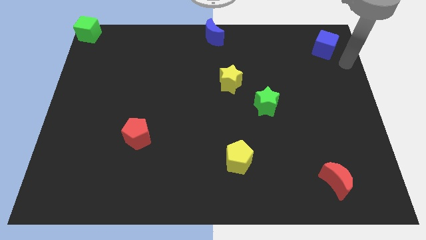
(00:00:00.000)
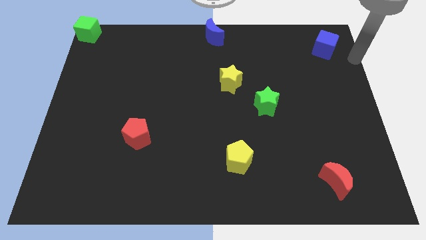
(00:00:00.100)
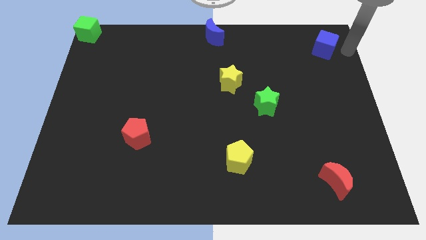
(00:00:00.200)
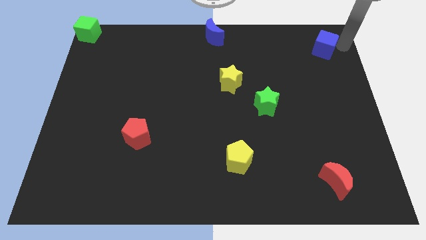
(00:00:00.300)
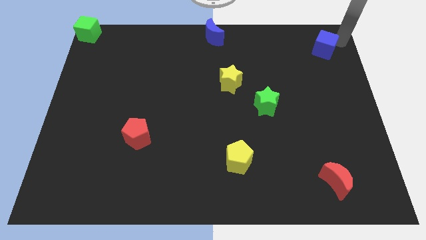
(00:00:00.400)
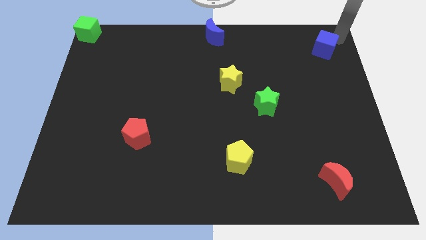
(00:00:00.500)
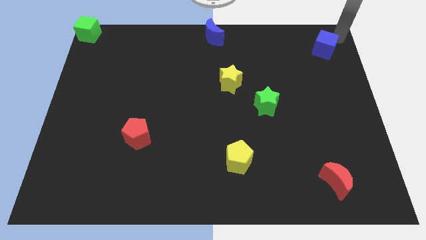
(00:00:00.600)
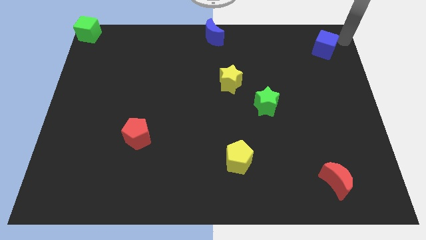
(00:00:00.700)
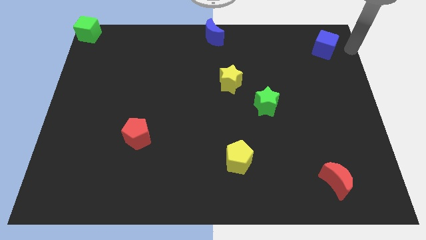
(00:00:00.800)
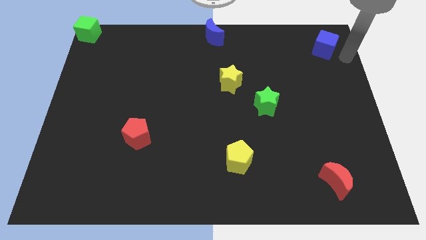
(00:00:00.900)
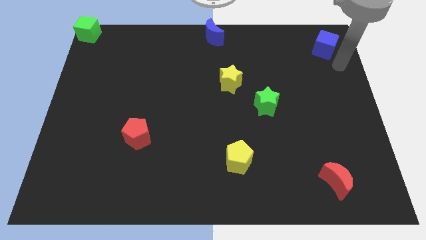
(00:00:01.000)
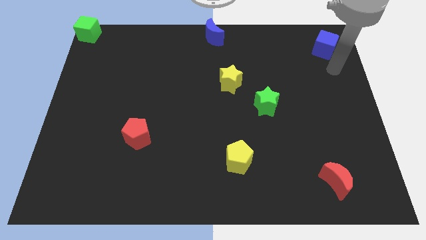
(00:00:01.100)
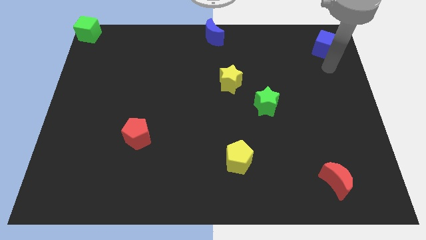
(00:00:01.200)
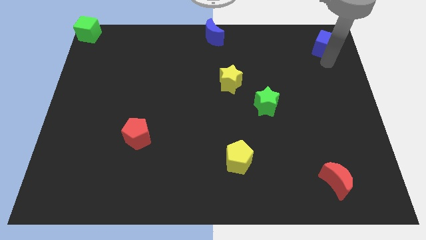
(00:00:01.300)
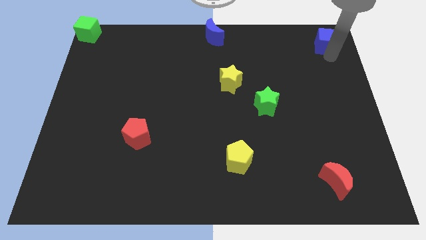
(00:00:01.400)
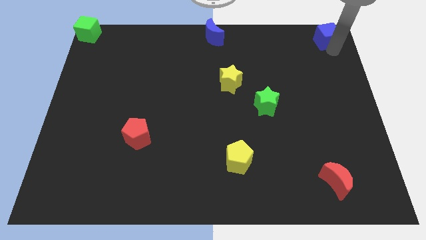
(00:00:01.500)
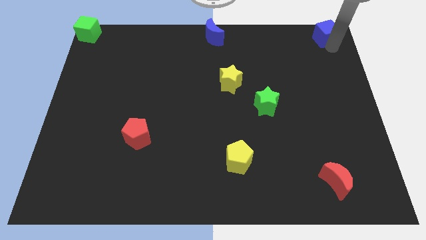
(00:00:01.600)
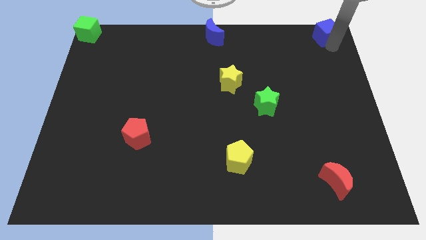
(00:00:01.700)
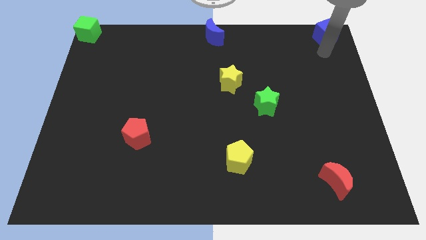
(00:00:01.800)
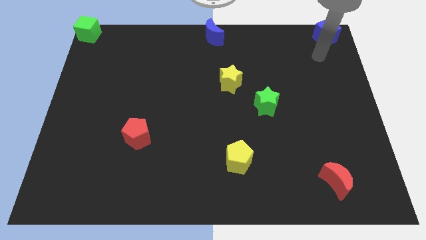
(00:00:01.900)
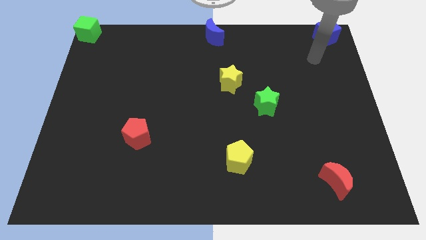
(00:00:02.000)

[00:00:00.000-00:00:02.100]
push the blue cube to the top right side of the board

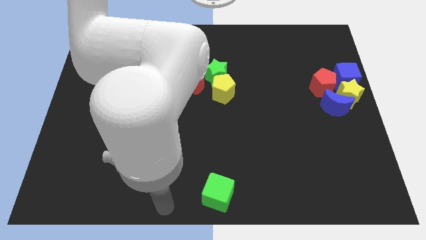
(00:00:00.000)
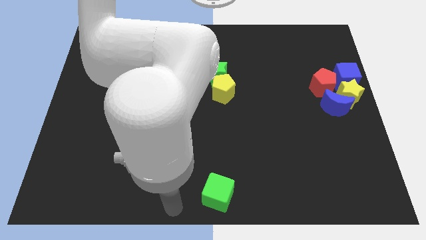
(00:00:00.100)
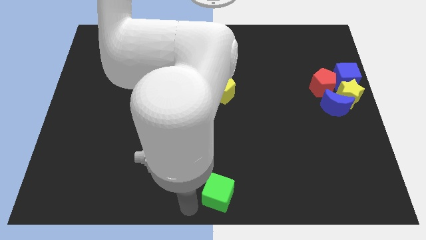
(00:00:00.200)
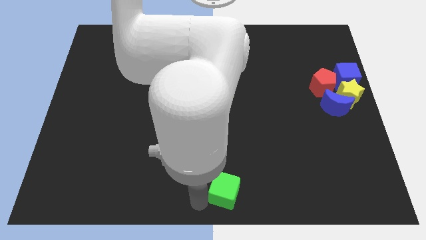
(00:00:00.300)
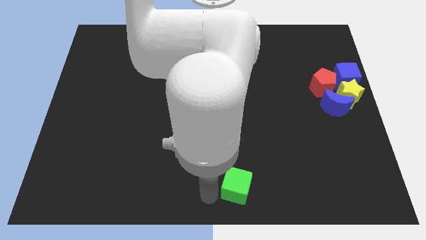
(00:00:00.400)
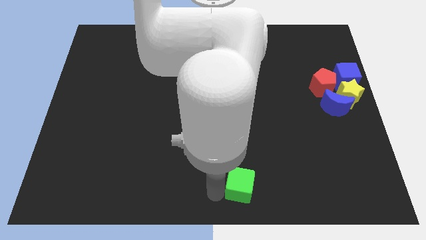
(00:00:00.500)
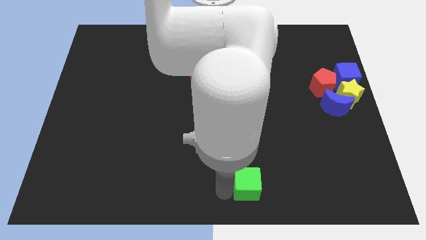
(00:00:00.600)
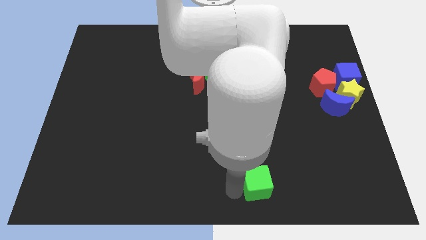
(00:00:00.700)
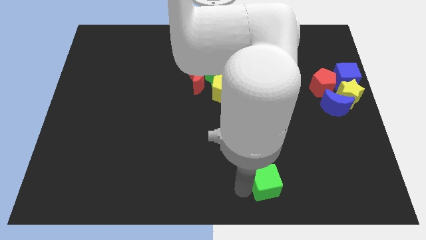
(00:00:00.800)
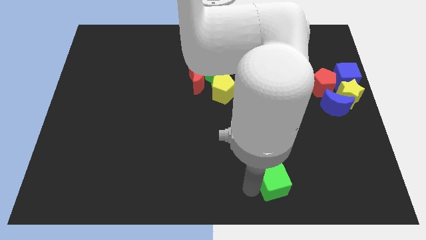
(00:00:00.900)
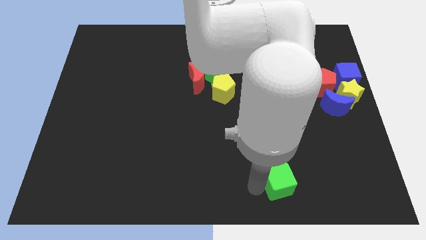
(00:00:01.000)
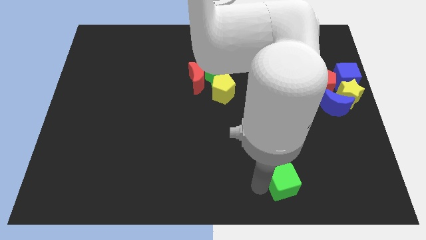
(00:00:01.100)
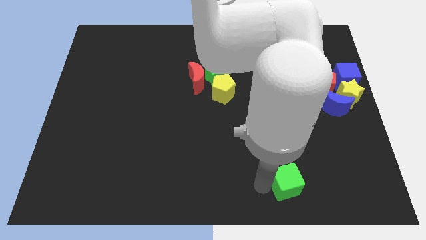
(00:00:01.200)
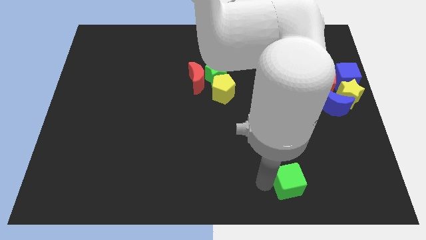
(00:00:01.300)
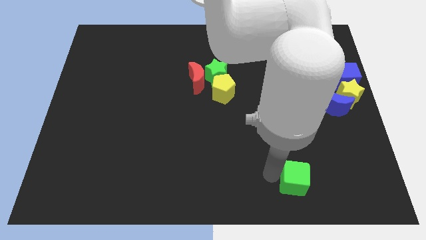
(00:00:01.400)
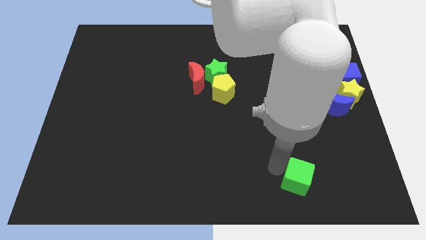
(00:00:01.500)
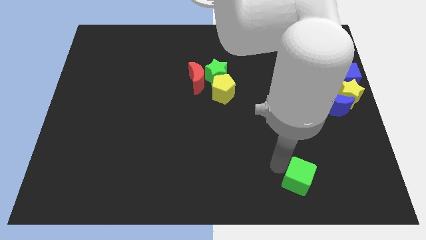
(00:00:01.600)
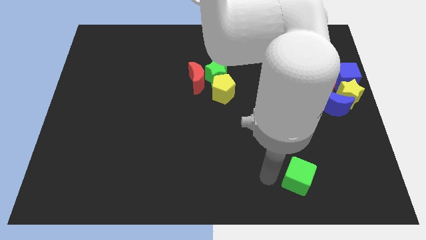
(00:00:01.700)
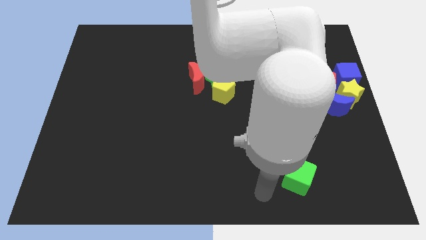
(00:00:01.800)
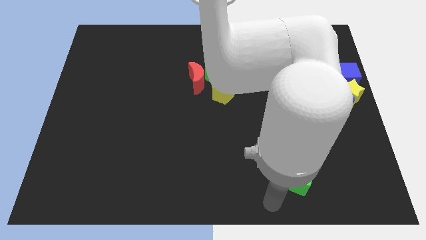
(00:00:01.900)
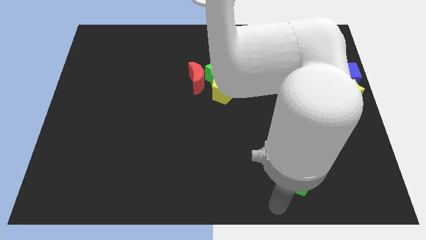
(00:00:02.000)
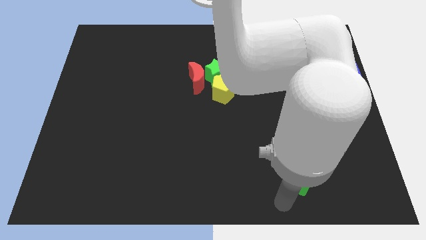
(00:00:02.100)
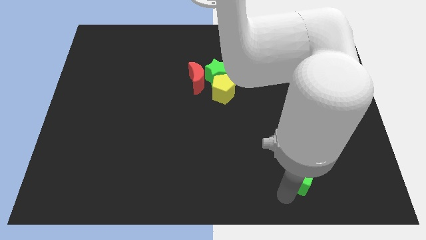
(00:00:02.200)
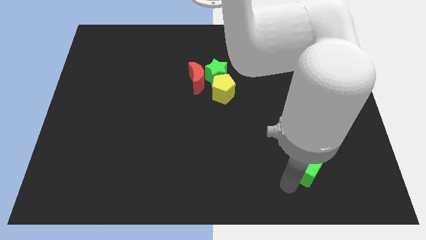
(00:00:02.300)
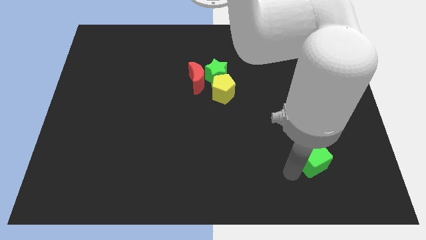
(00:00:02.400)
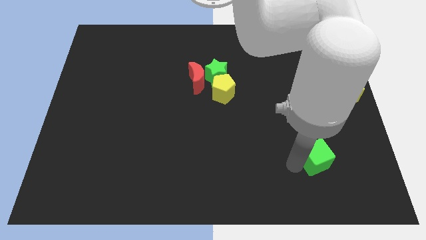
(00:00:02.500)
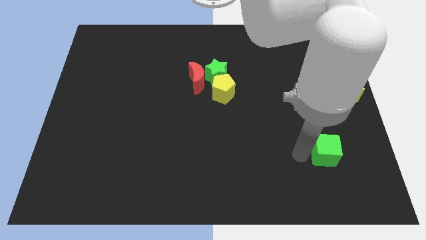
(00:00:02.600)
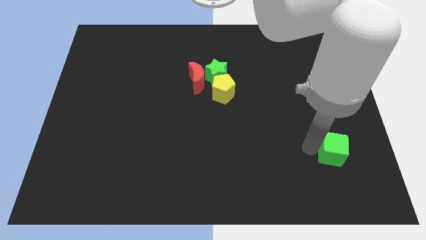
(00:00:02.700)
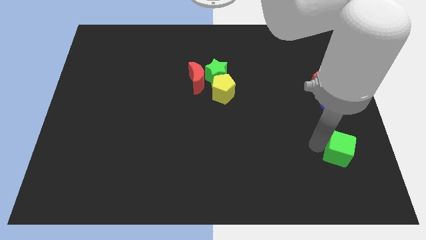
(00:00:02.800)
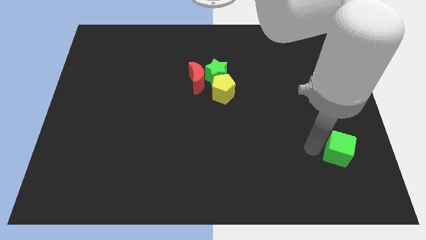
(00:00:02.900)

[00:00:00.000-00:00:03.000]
move the green cube to the bottom of the blue crescent

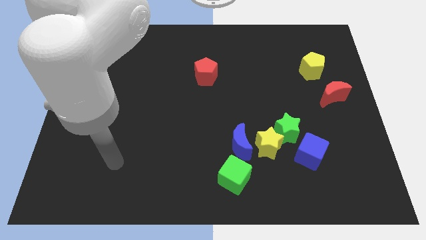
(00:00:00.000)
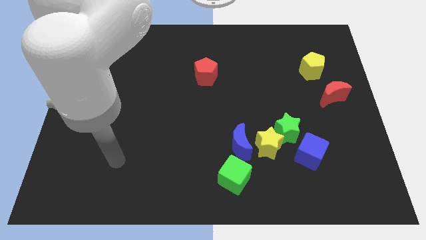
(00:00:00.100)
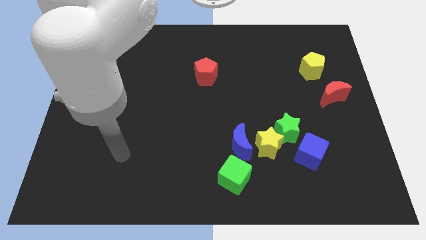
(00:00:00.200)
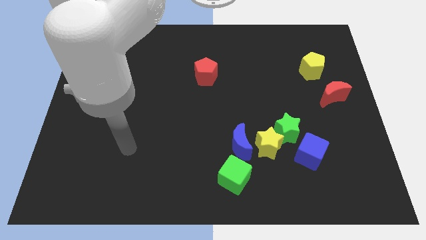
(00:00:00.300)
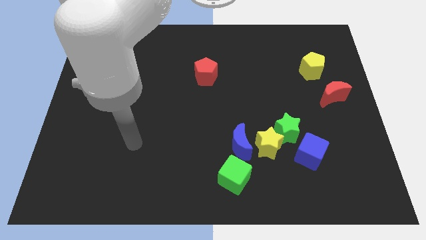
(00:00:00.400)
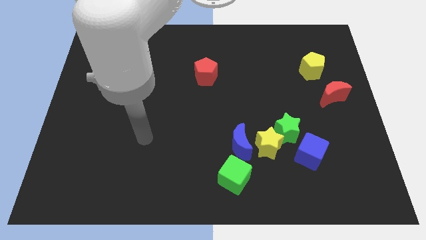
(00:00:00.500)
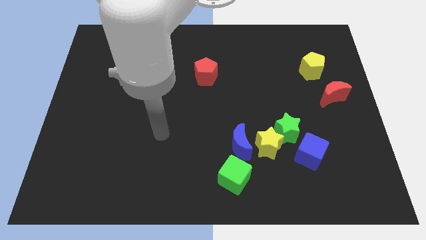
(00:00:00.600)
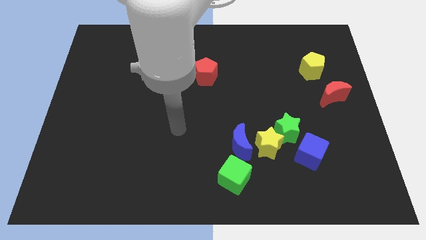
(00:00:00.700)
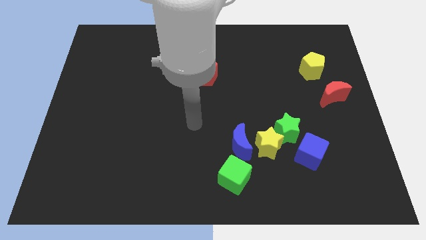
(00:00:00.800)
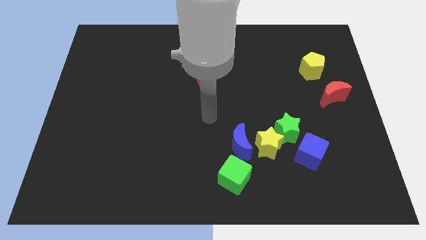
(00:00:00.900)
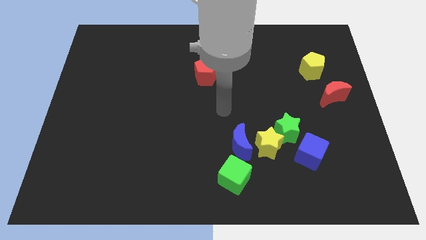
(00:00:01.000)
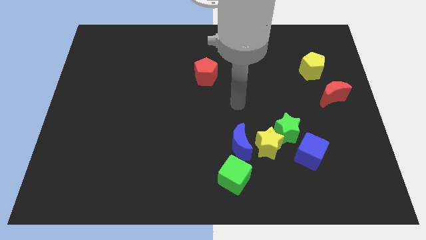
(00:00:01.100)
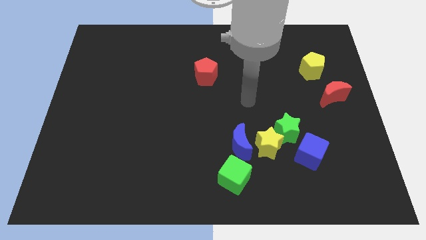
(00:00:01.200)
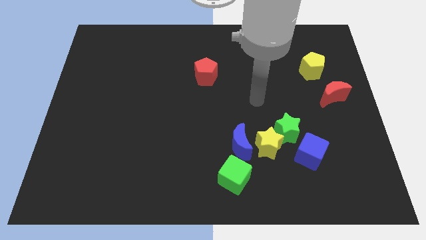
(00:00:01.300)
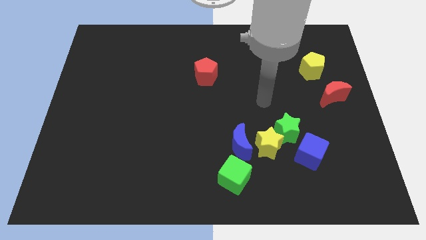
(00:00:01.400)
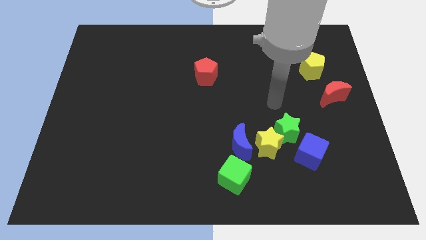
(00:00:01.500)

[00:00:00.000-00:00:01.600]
move the arm close to the green star

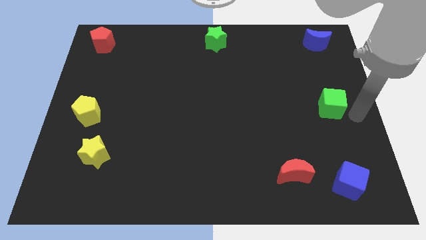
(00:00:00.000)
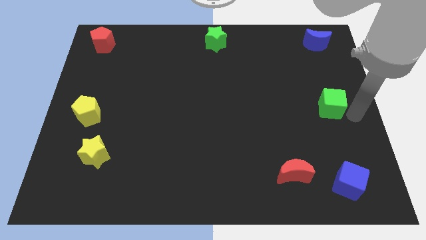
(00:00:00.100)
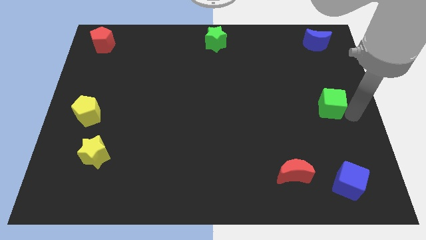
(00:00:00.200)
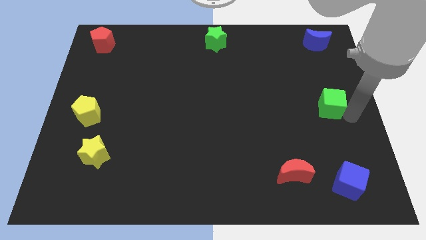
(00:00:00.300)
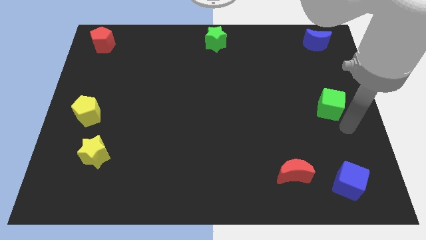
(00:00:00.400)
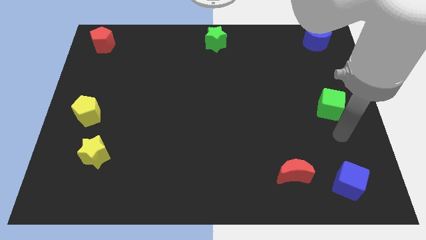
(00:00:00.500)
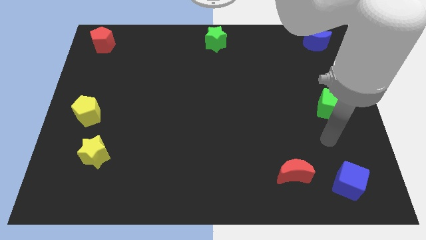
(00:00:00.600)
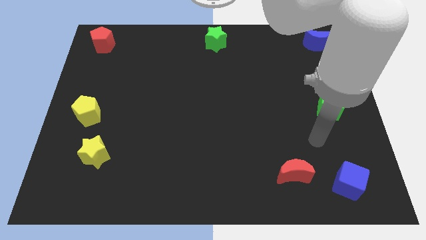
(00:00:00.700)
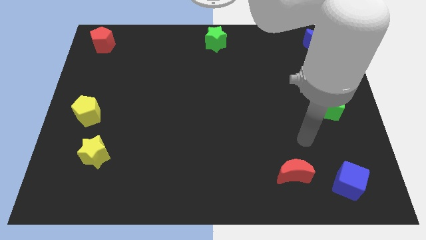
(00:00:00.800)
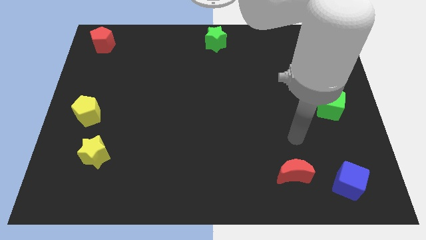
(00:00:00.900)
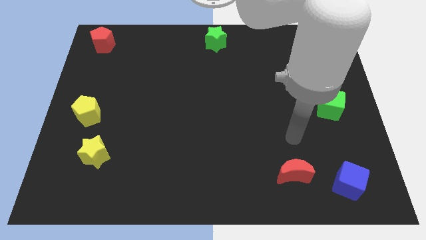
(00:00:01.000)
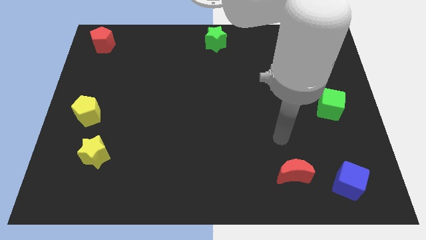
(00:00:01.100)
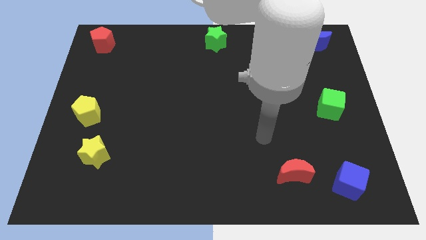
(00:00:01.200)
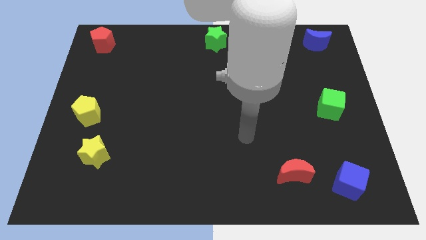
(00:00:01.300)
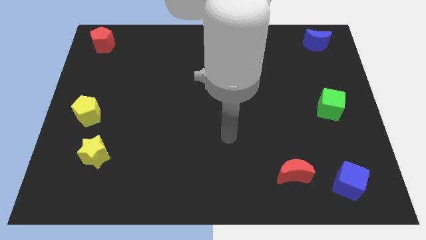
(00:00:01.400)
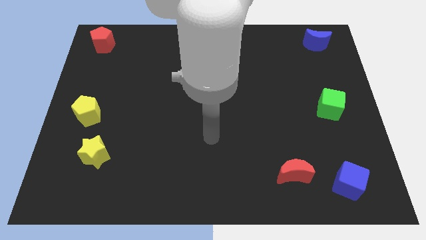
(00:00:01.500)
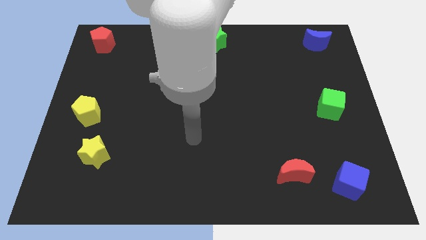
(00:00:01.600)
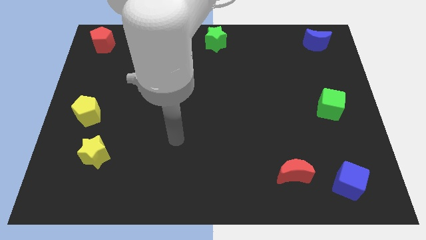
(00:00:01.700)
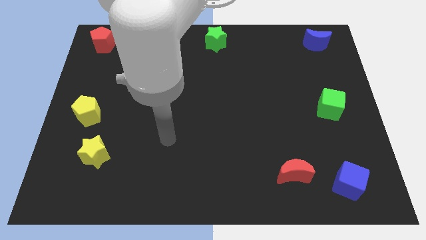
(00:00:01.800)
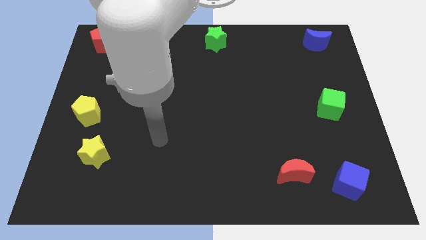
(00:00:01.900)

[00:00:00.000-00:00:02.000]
move your arm away from from the right side of the green cube

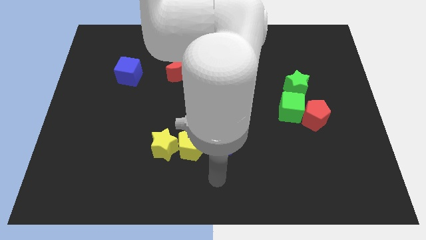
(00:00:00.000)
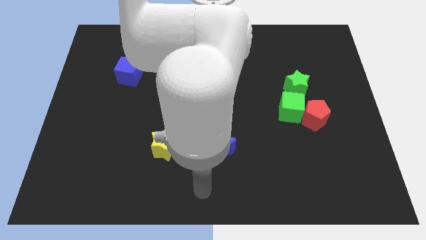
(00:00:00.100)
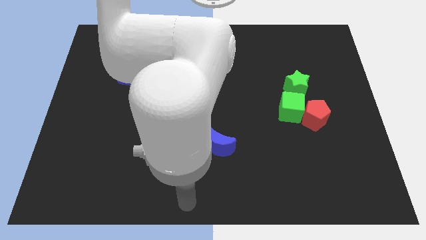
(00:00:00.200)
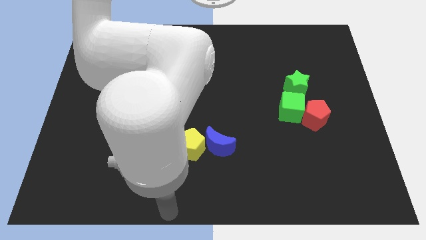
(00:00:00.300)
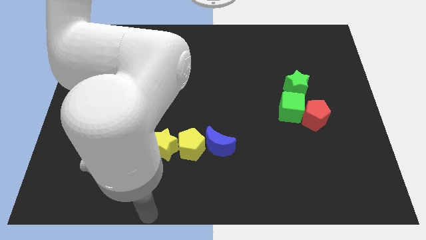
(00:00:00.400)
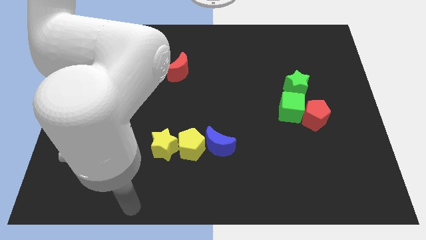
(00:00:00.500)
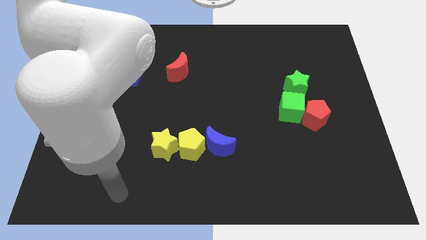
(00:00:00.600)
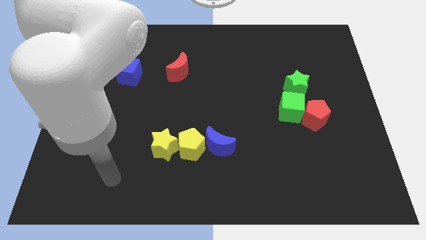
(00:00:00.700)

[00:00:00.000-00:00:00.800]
move the arm downwards
